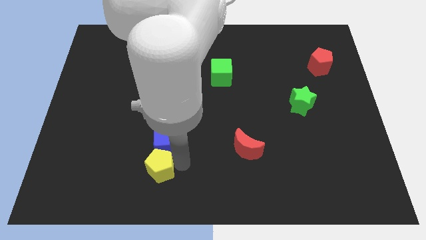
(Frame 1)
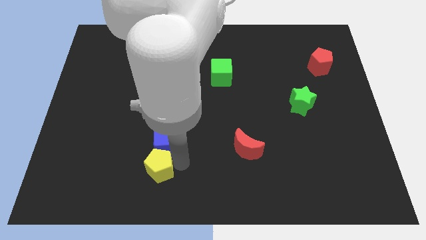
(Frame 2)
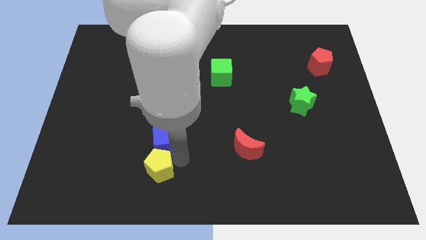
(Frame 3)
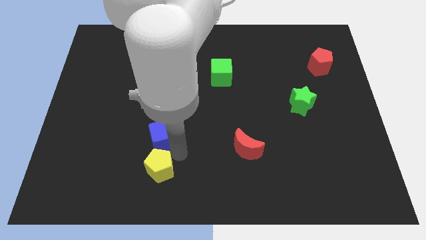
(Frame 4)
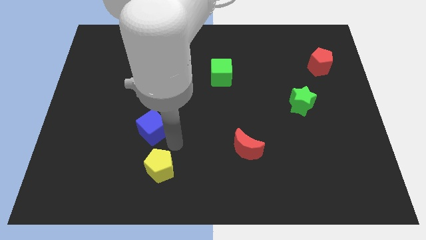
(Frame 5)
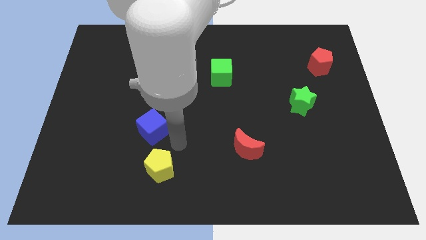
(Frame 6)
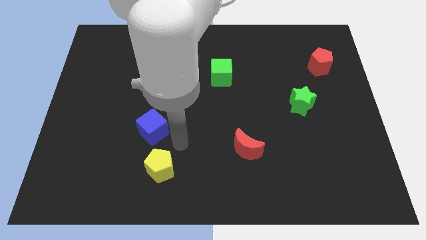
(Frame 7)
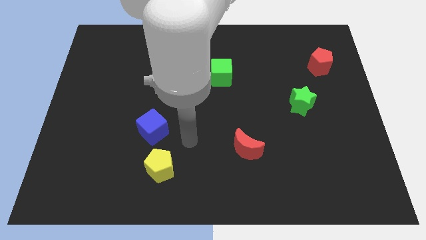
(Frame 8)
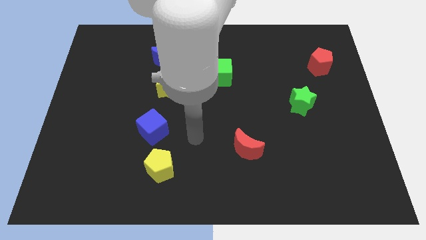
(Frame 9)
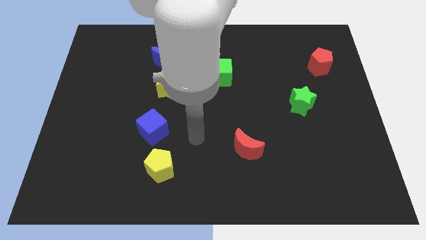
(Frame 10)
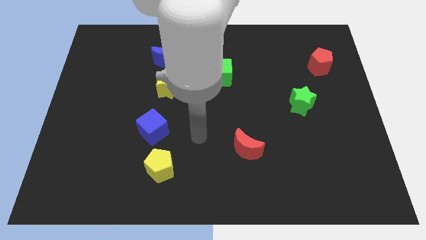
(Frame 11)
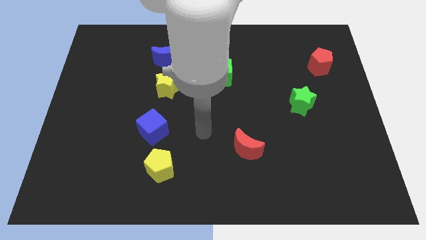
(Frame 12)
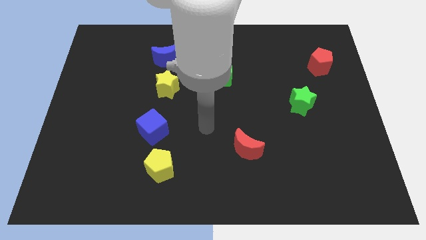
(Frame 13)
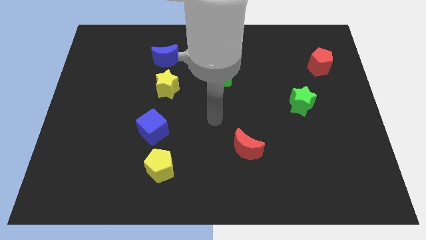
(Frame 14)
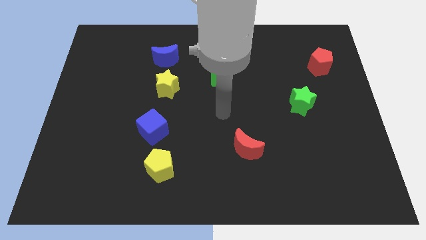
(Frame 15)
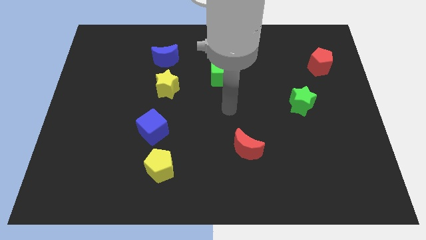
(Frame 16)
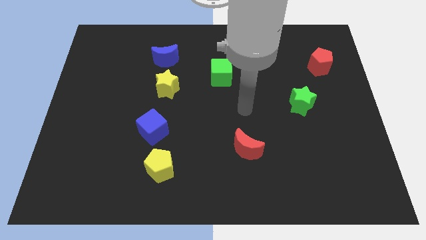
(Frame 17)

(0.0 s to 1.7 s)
separate the blue cube and the yellow pentagon

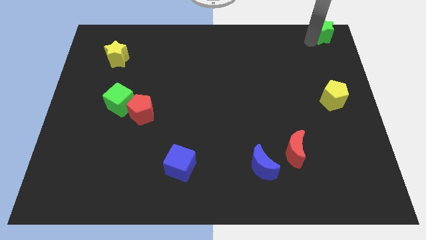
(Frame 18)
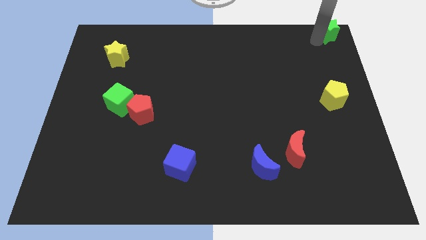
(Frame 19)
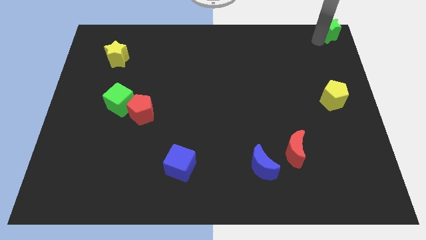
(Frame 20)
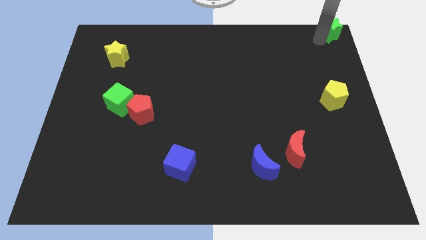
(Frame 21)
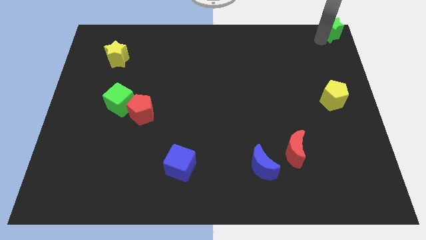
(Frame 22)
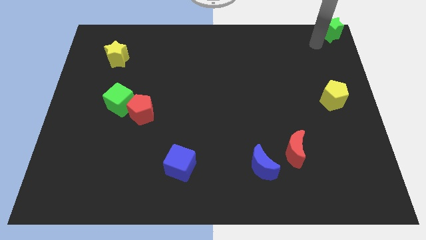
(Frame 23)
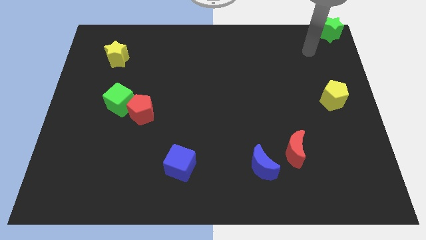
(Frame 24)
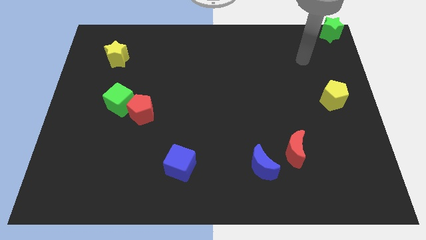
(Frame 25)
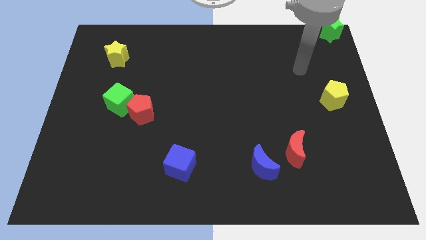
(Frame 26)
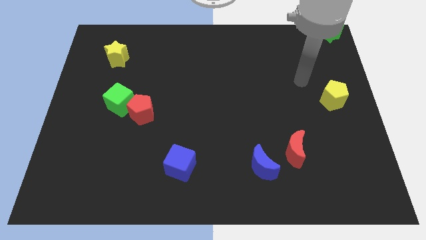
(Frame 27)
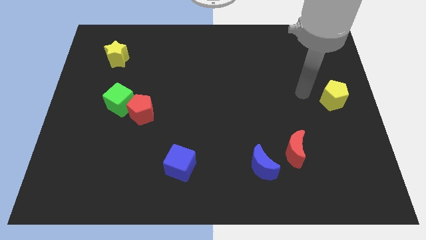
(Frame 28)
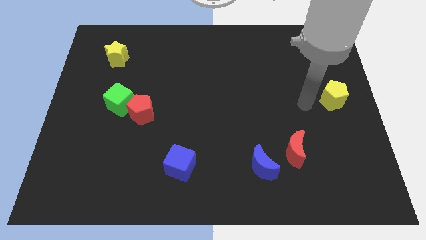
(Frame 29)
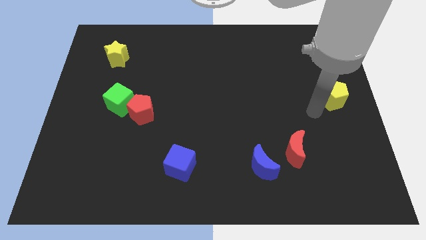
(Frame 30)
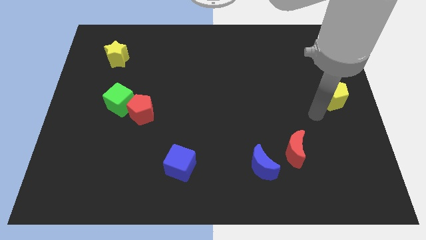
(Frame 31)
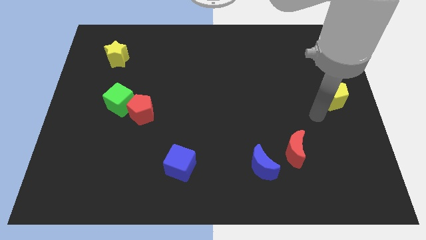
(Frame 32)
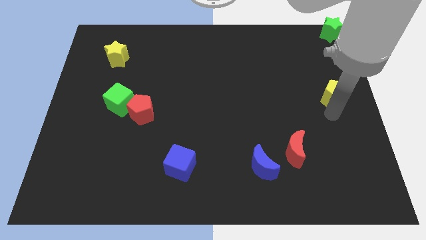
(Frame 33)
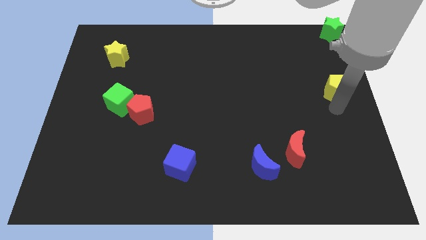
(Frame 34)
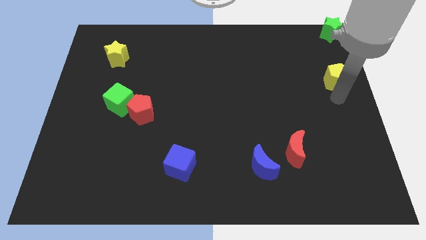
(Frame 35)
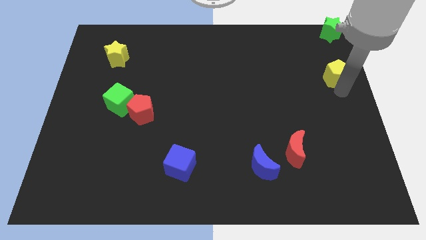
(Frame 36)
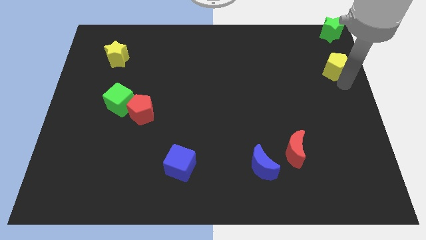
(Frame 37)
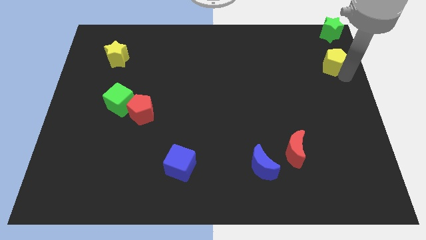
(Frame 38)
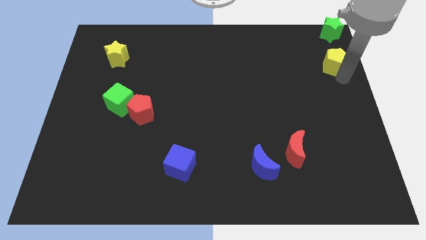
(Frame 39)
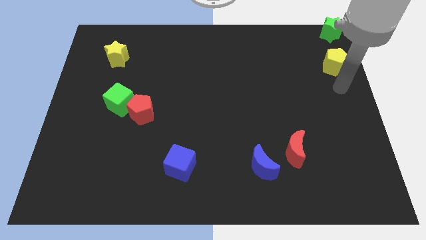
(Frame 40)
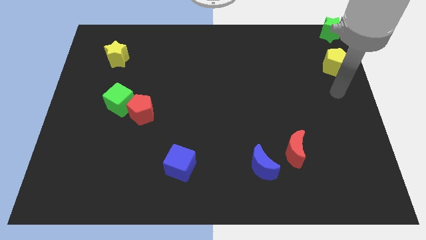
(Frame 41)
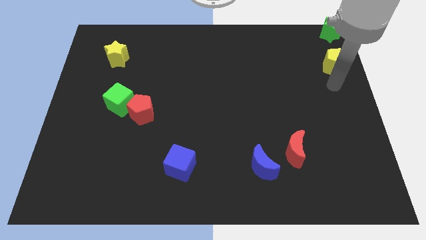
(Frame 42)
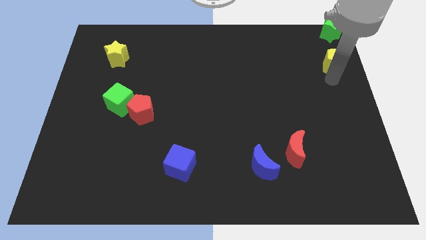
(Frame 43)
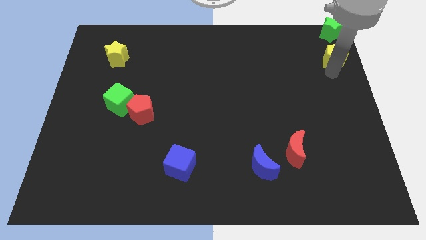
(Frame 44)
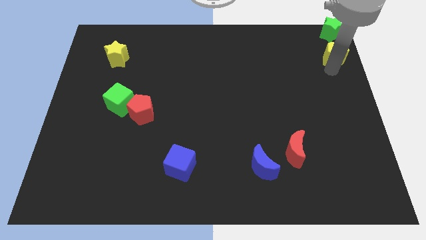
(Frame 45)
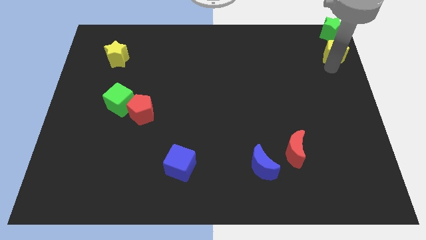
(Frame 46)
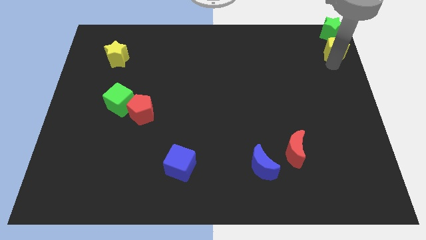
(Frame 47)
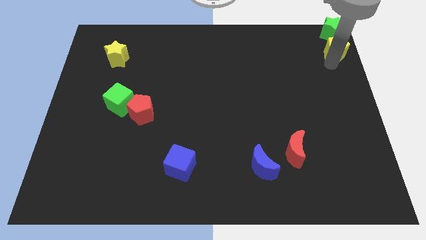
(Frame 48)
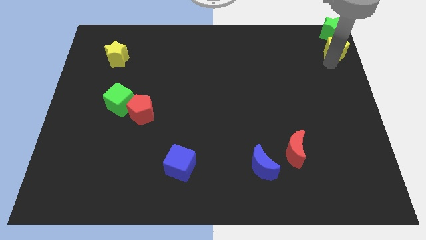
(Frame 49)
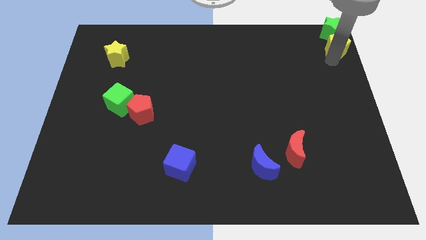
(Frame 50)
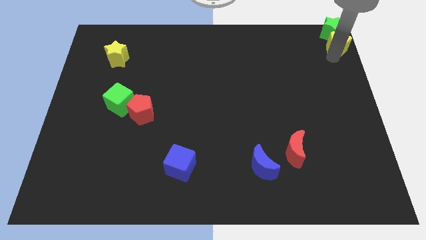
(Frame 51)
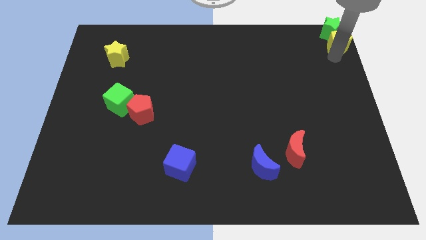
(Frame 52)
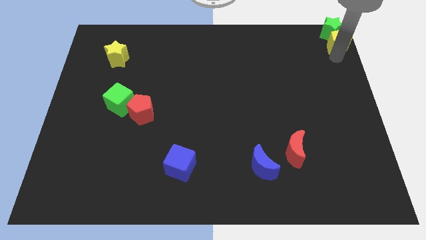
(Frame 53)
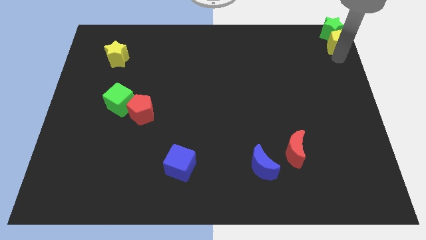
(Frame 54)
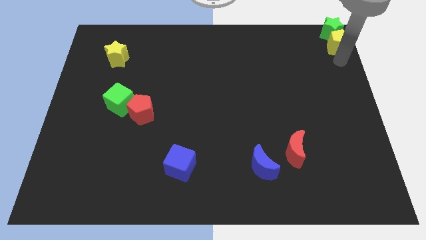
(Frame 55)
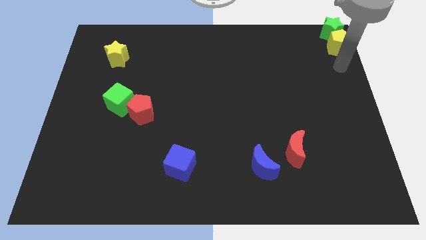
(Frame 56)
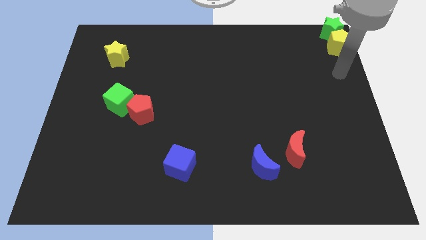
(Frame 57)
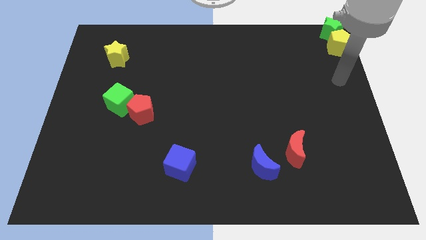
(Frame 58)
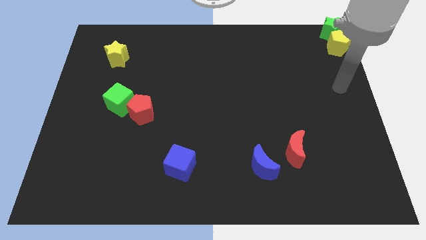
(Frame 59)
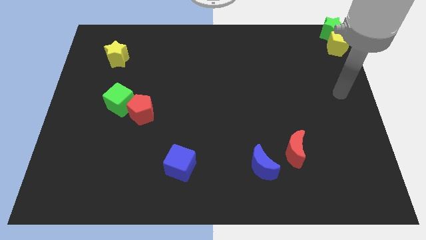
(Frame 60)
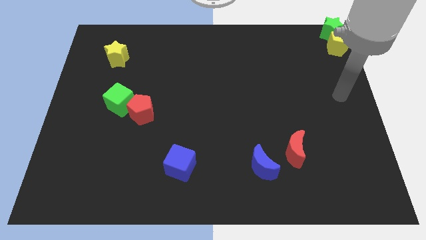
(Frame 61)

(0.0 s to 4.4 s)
place the yellow pentagon below the green star

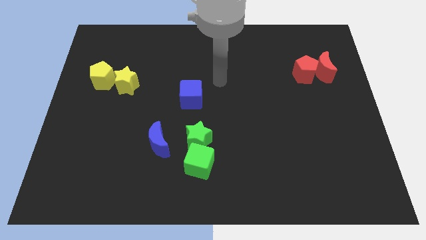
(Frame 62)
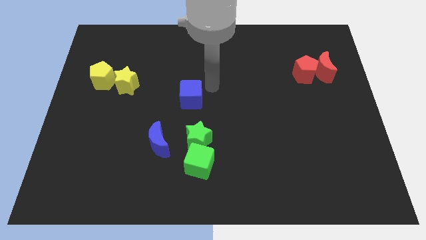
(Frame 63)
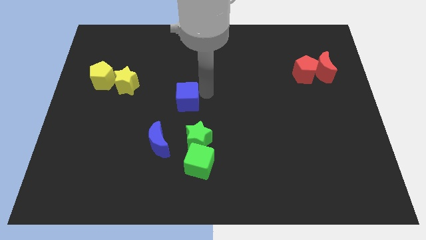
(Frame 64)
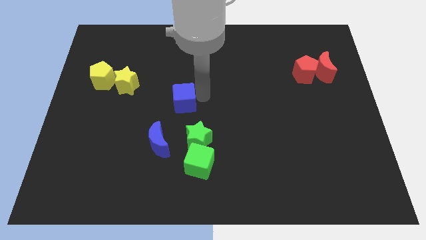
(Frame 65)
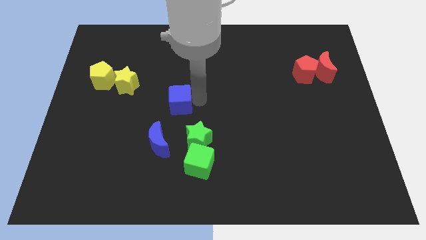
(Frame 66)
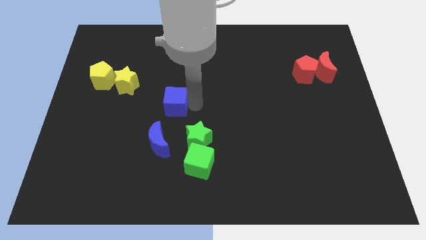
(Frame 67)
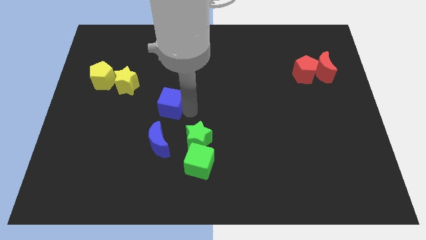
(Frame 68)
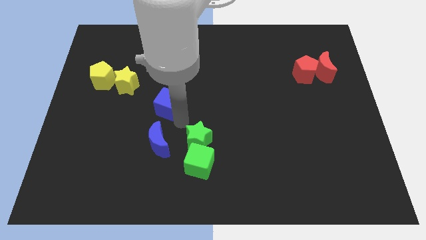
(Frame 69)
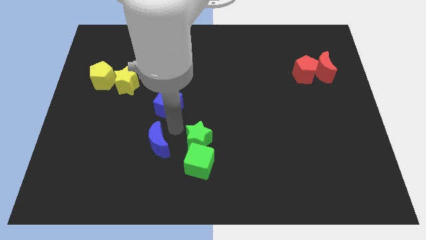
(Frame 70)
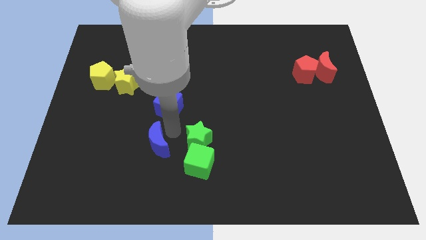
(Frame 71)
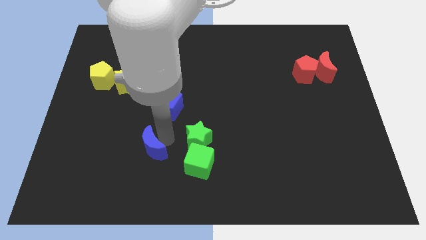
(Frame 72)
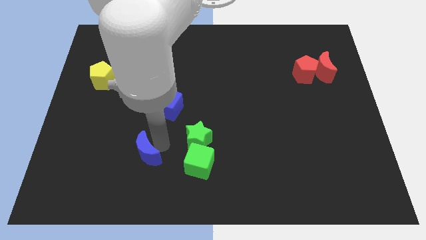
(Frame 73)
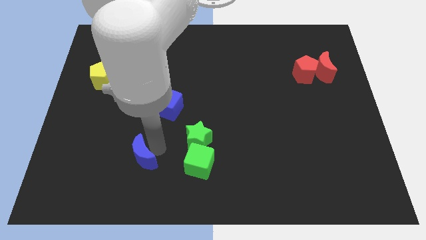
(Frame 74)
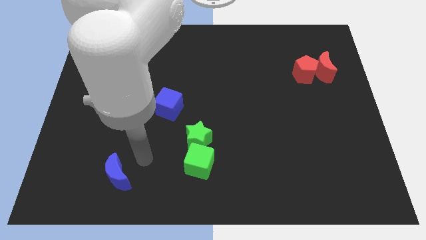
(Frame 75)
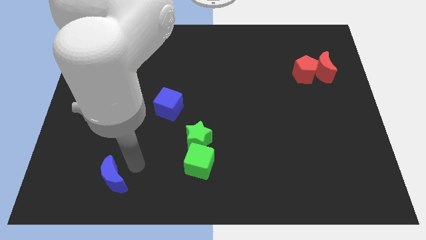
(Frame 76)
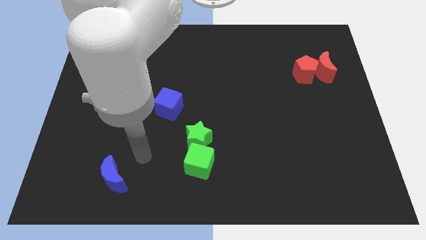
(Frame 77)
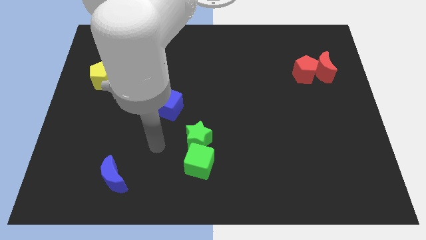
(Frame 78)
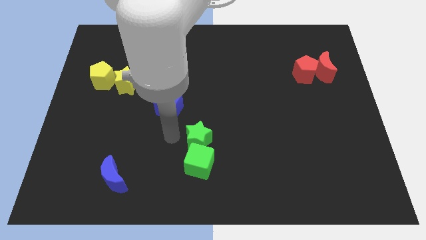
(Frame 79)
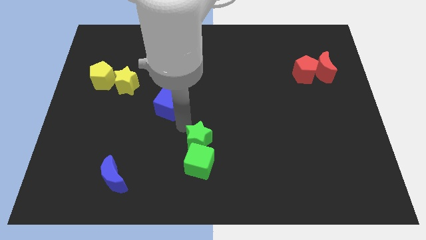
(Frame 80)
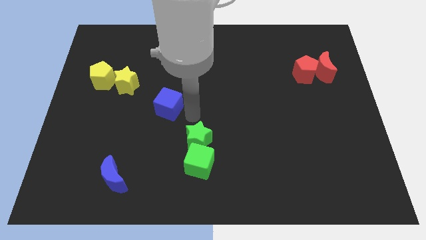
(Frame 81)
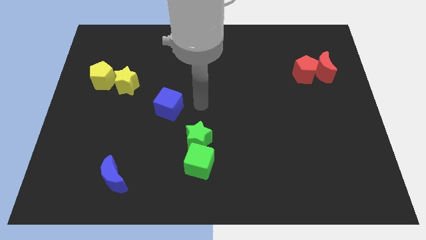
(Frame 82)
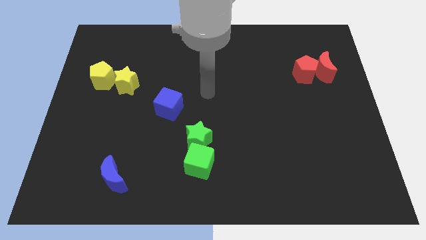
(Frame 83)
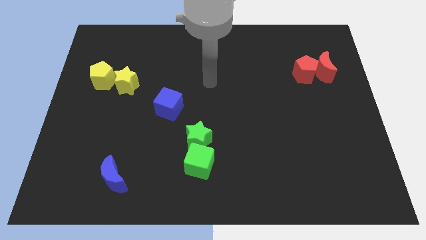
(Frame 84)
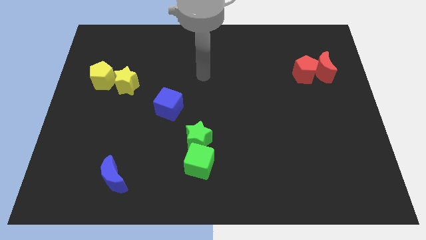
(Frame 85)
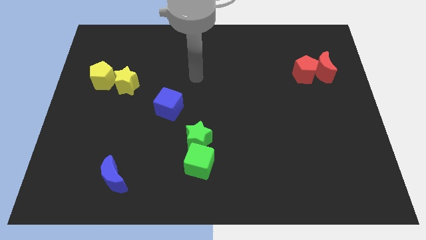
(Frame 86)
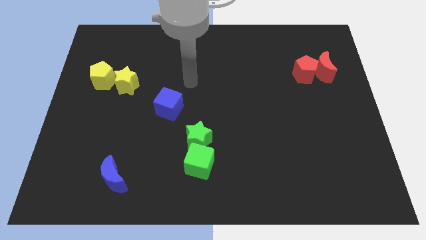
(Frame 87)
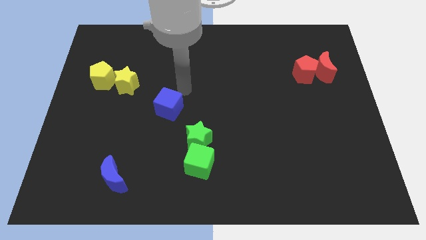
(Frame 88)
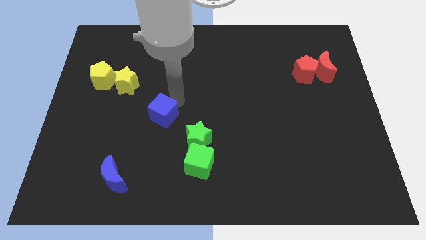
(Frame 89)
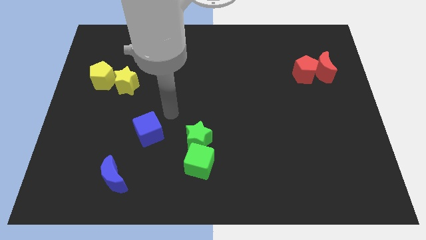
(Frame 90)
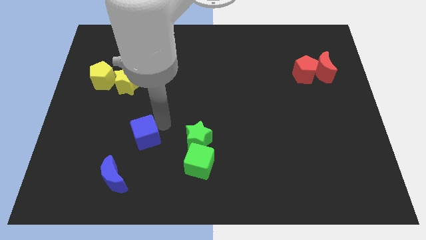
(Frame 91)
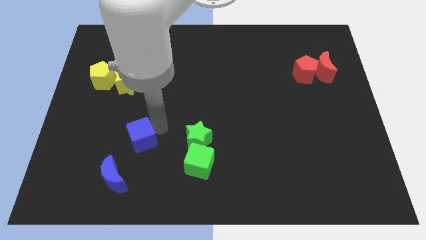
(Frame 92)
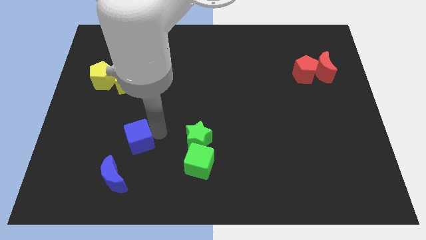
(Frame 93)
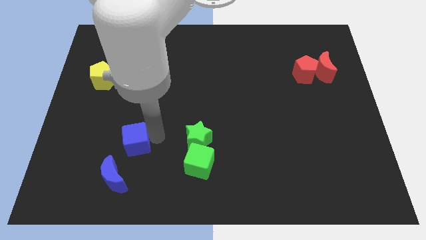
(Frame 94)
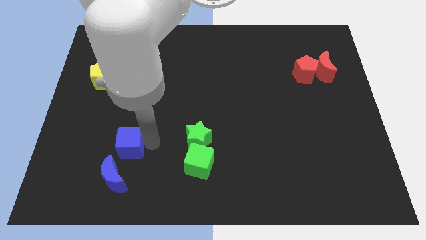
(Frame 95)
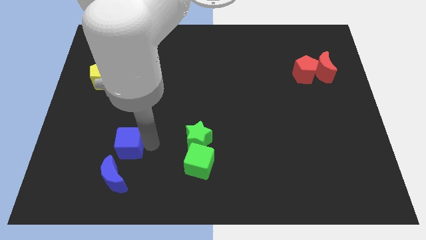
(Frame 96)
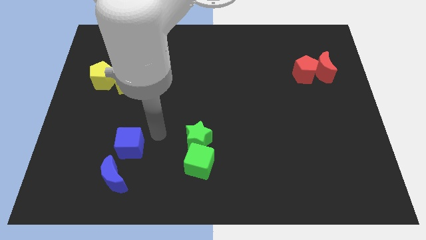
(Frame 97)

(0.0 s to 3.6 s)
move the blue cube to the left side of the green star
